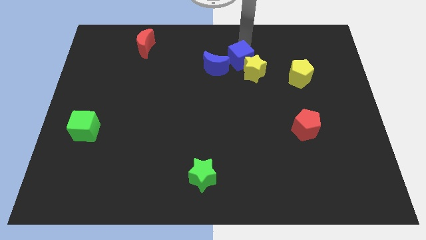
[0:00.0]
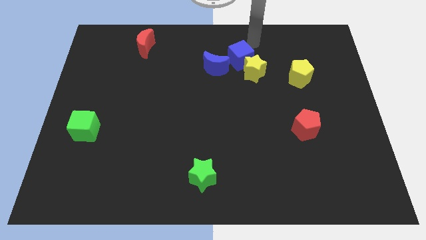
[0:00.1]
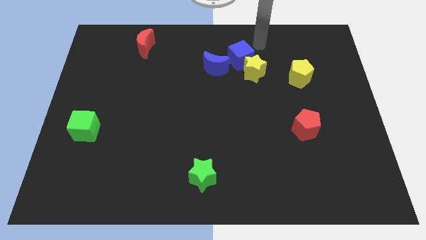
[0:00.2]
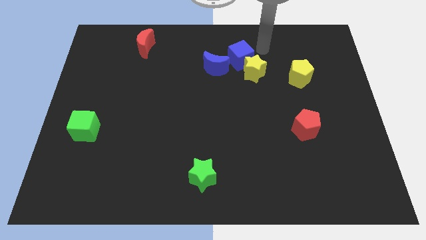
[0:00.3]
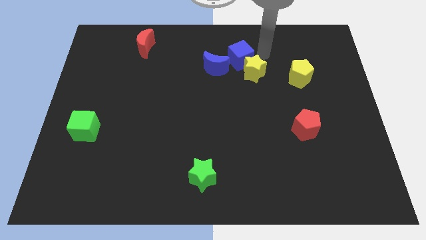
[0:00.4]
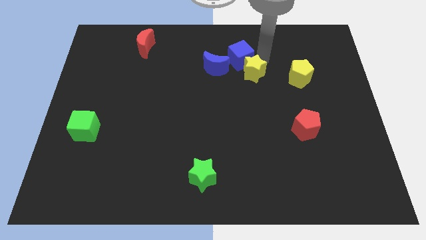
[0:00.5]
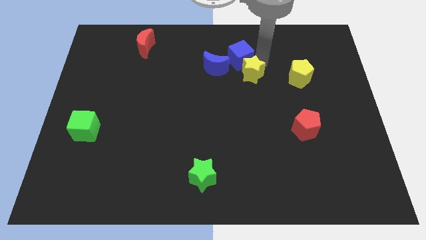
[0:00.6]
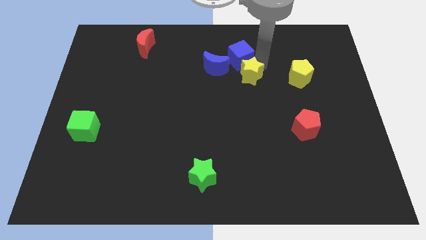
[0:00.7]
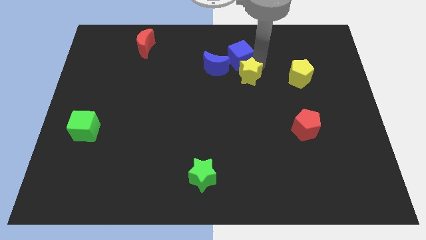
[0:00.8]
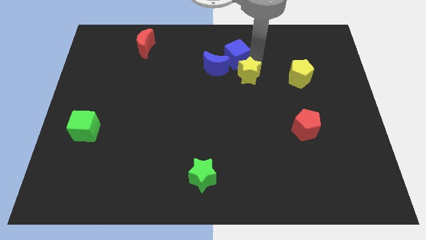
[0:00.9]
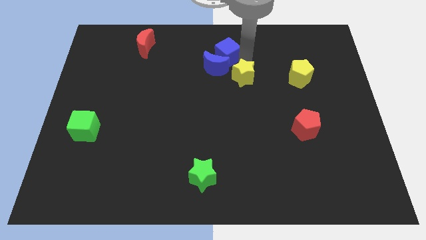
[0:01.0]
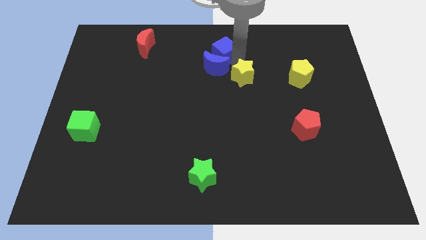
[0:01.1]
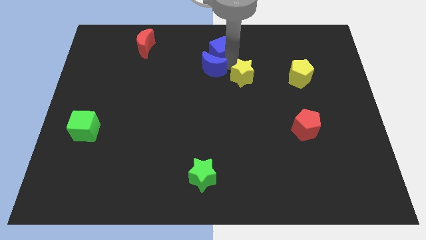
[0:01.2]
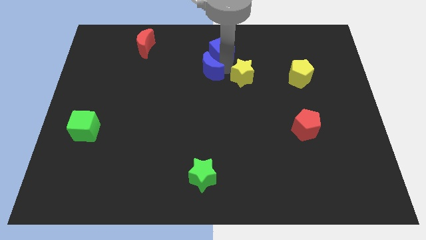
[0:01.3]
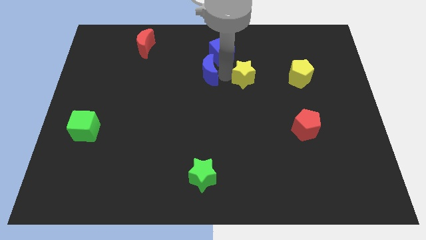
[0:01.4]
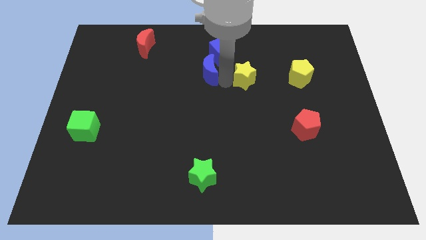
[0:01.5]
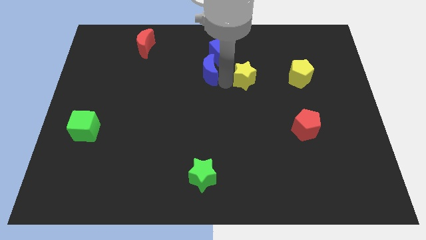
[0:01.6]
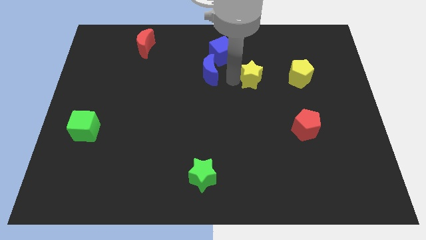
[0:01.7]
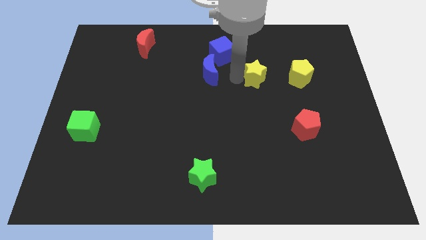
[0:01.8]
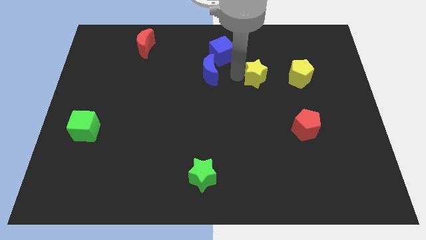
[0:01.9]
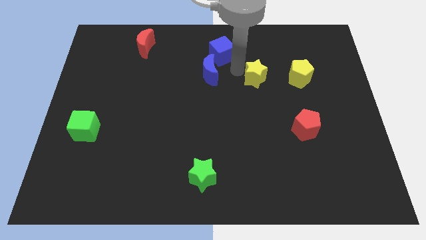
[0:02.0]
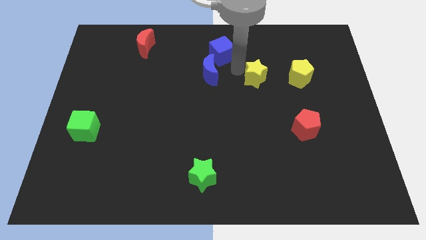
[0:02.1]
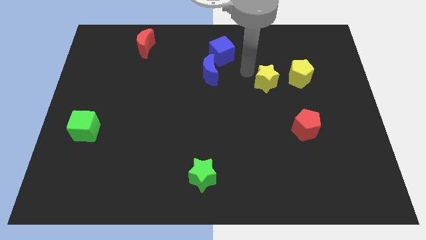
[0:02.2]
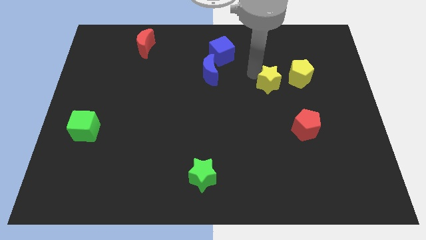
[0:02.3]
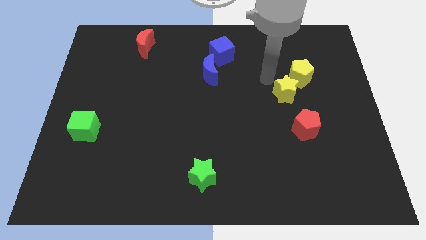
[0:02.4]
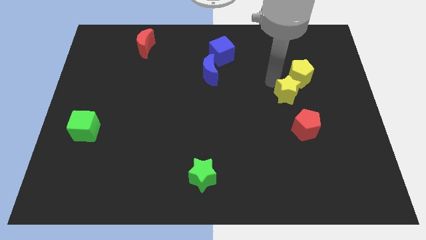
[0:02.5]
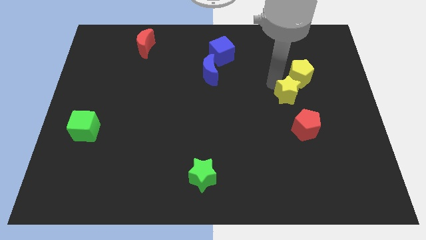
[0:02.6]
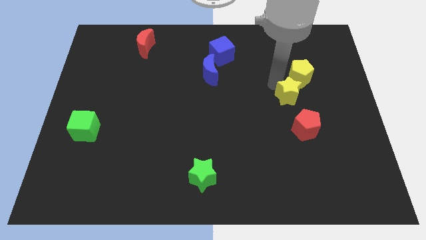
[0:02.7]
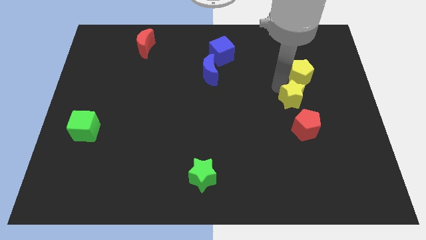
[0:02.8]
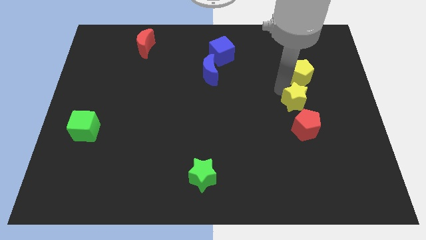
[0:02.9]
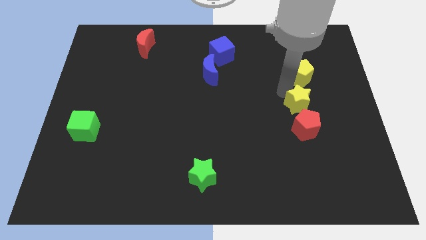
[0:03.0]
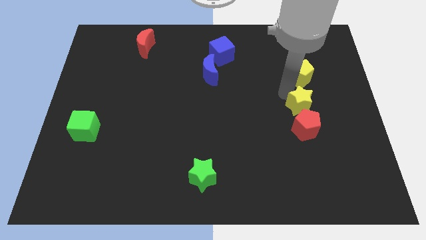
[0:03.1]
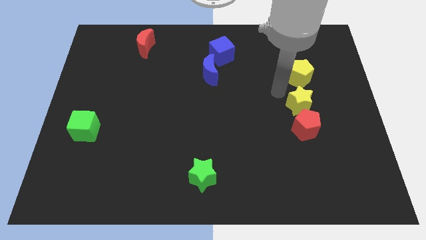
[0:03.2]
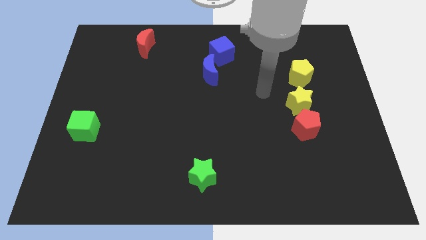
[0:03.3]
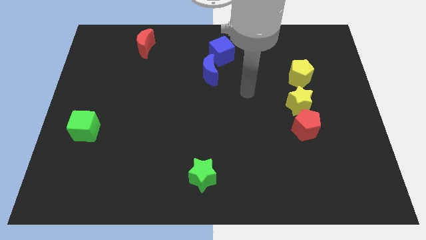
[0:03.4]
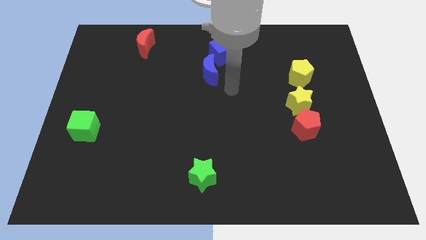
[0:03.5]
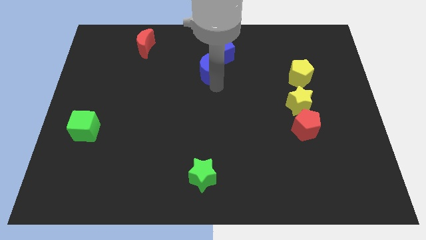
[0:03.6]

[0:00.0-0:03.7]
place blue cube diagonally top right to blue moon

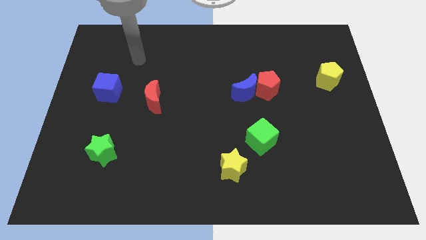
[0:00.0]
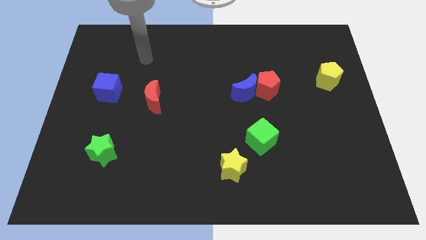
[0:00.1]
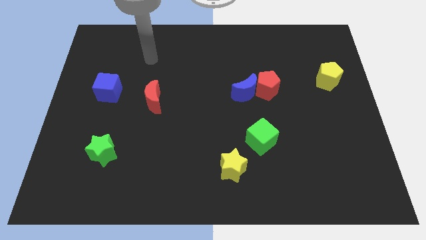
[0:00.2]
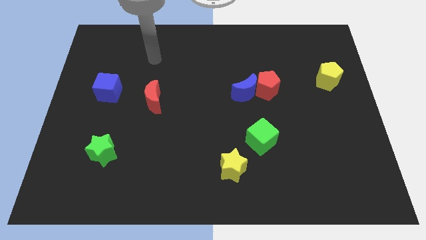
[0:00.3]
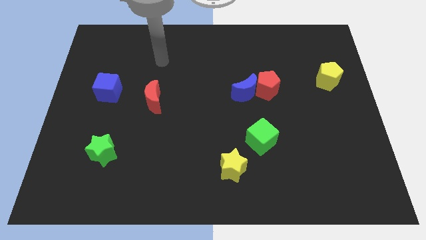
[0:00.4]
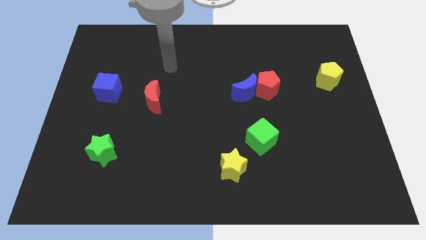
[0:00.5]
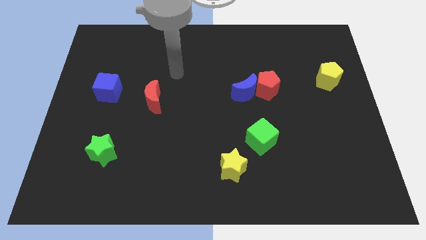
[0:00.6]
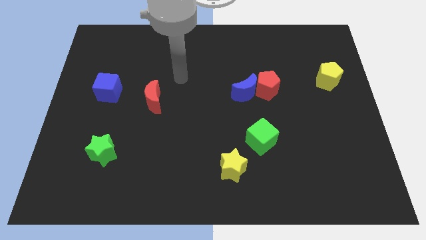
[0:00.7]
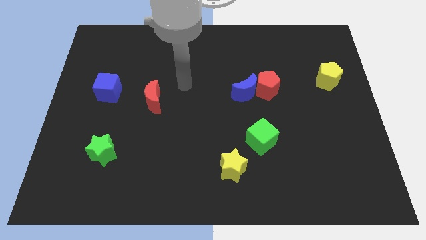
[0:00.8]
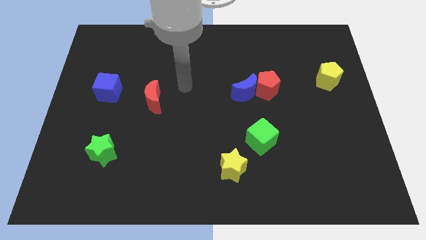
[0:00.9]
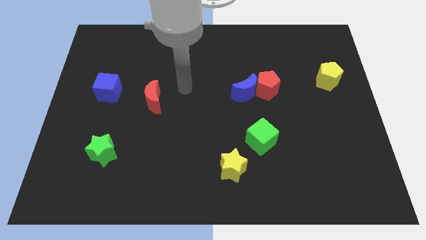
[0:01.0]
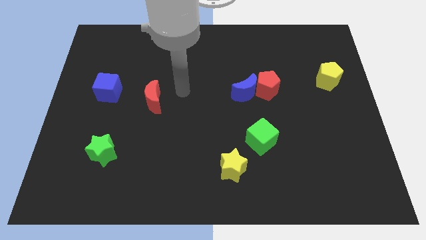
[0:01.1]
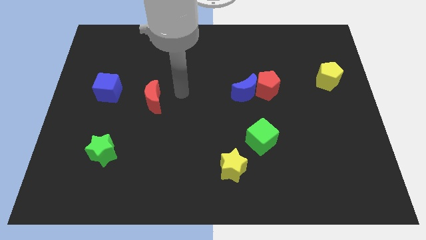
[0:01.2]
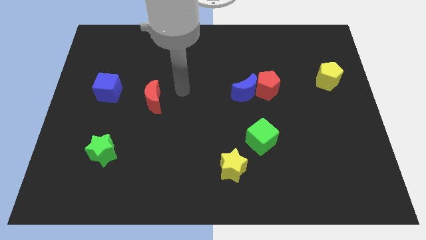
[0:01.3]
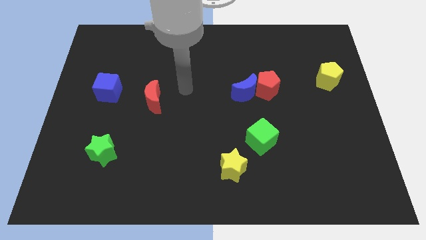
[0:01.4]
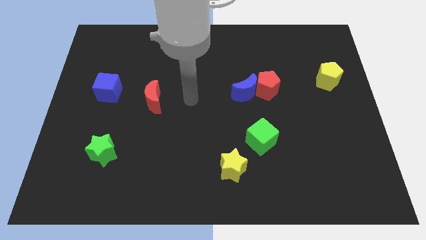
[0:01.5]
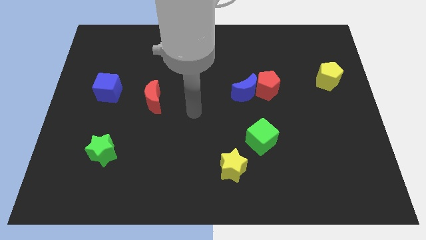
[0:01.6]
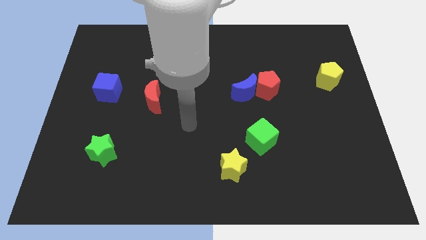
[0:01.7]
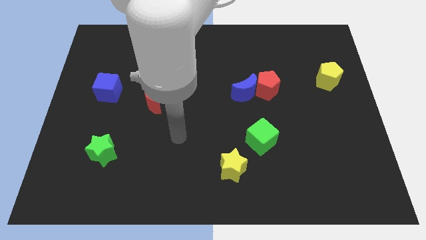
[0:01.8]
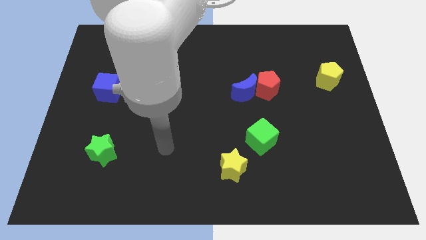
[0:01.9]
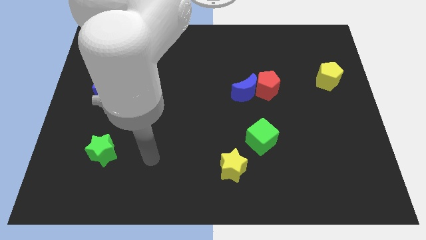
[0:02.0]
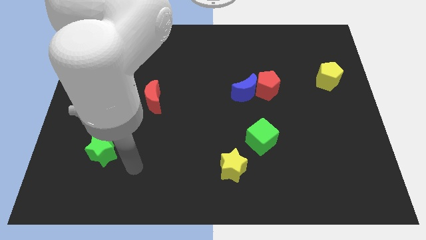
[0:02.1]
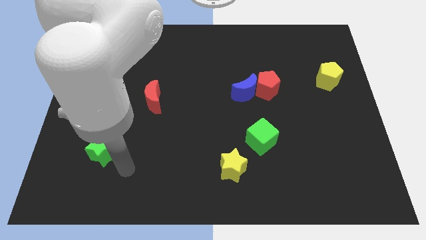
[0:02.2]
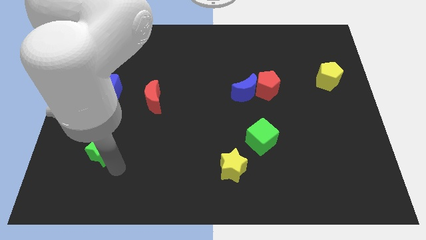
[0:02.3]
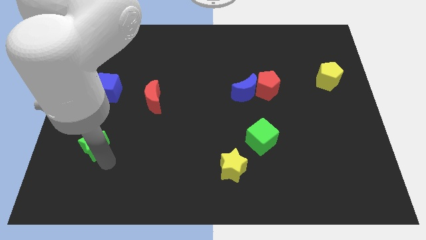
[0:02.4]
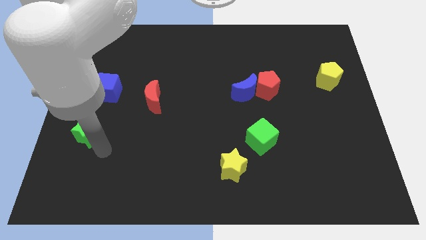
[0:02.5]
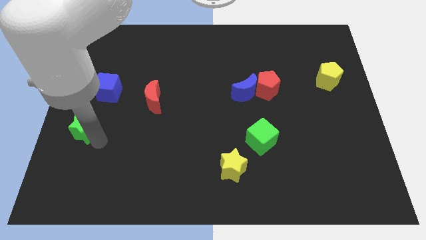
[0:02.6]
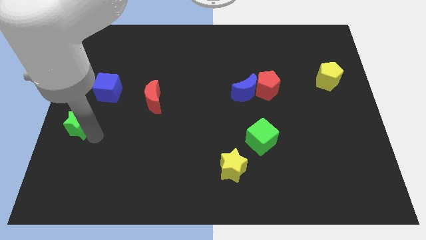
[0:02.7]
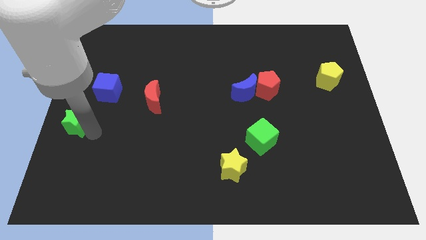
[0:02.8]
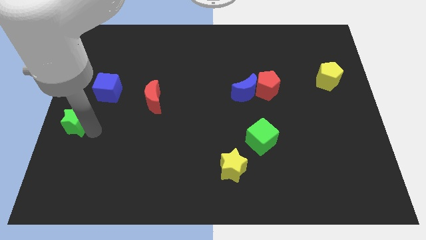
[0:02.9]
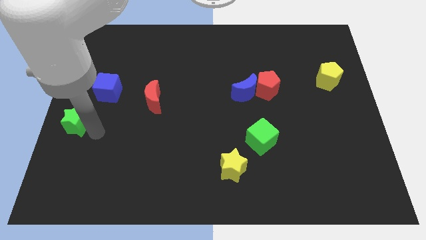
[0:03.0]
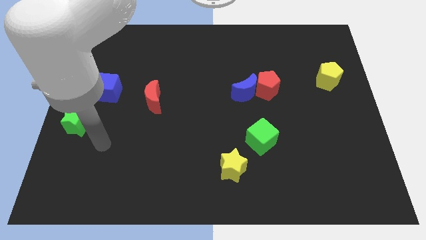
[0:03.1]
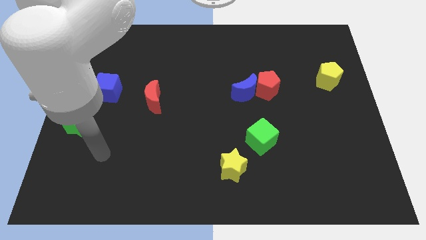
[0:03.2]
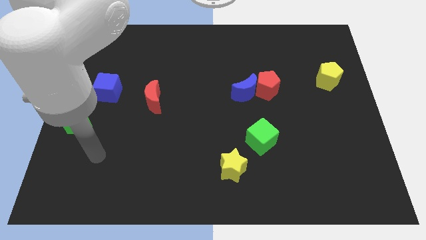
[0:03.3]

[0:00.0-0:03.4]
push the green star towards the top left

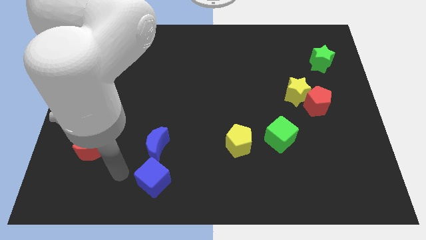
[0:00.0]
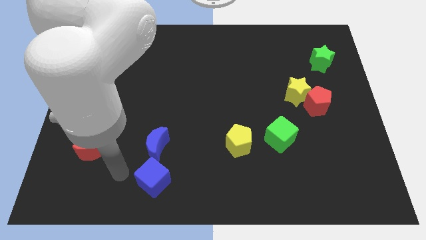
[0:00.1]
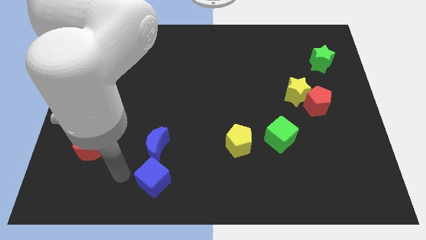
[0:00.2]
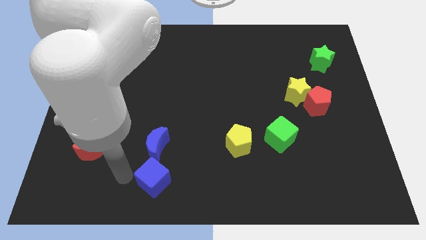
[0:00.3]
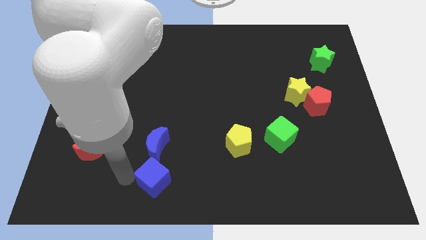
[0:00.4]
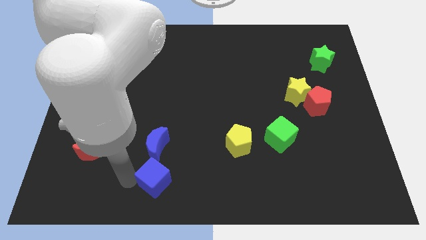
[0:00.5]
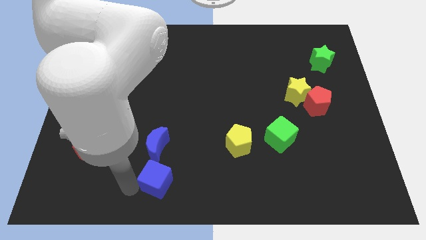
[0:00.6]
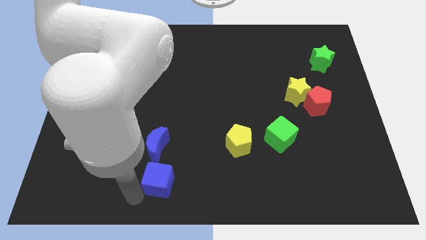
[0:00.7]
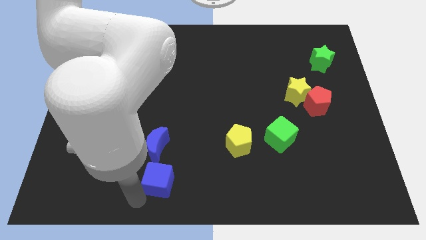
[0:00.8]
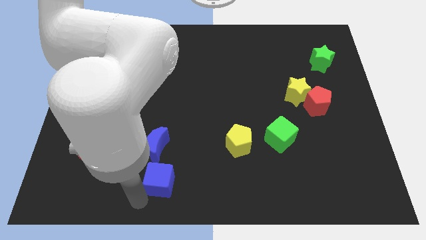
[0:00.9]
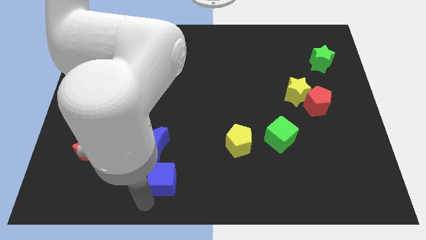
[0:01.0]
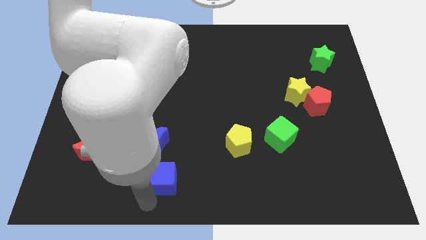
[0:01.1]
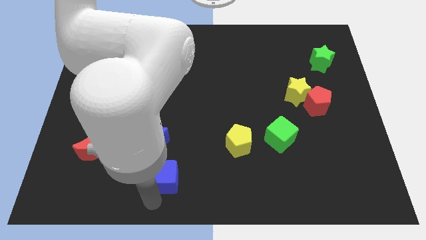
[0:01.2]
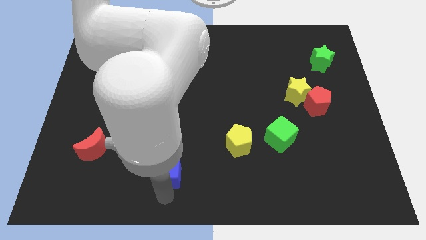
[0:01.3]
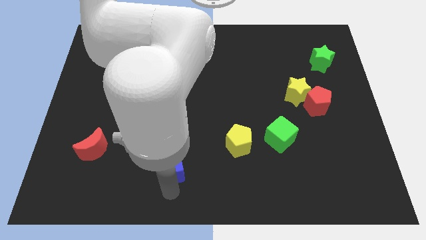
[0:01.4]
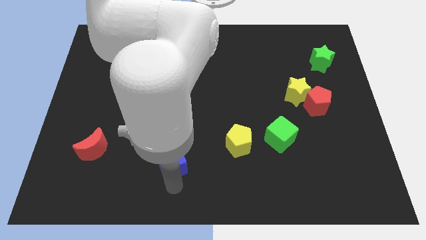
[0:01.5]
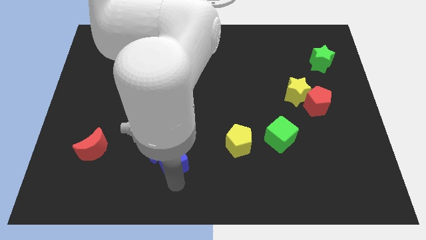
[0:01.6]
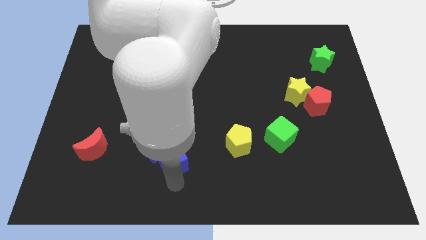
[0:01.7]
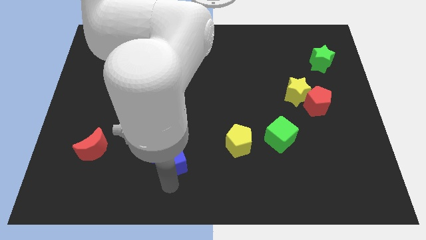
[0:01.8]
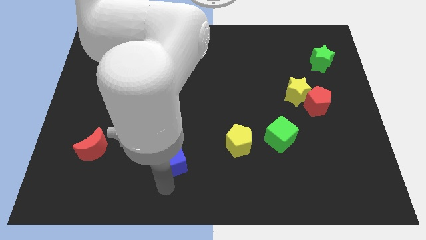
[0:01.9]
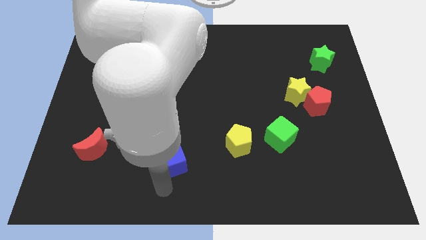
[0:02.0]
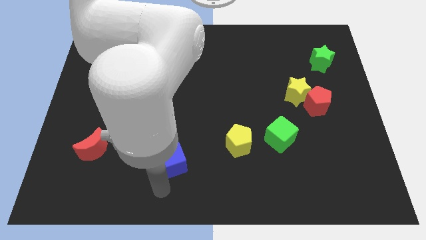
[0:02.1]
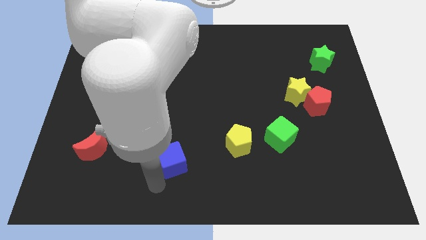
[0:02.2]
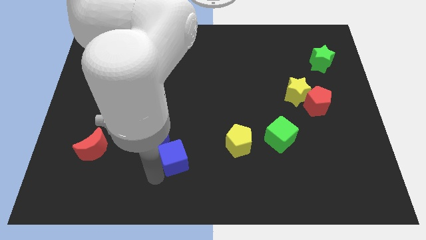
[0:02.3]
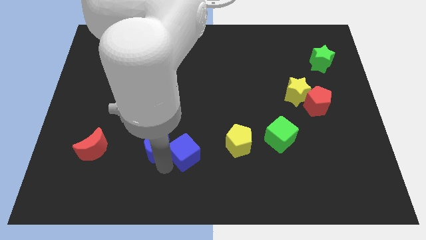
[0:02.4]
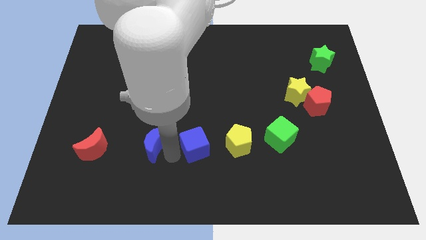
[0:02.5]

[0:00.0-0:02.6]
move the blue cube to the right of the blue crescent
